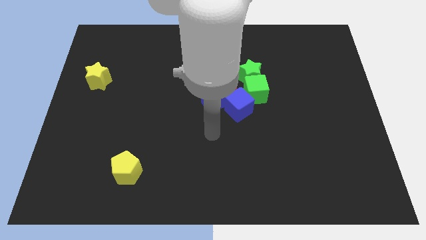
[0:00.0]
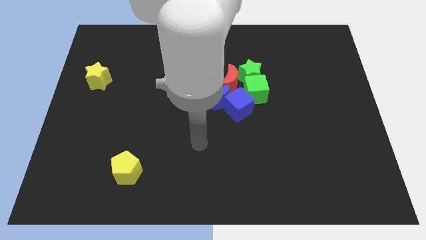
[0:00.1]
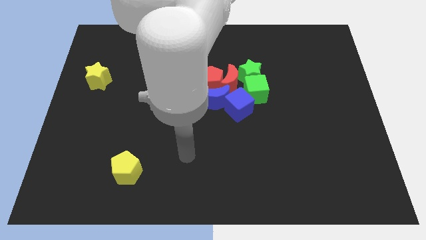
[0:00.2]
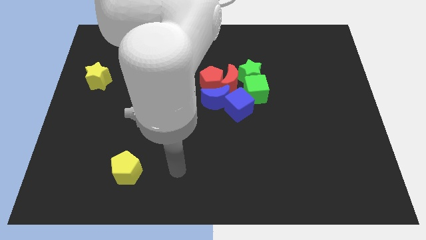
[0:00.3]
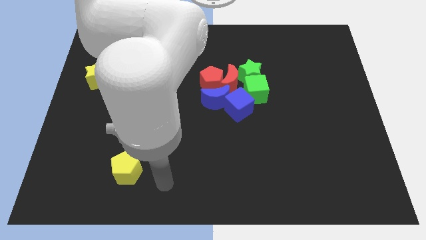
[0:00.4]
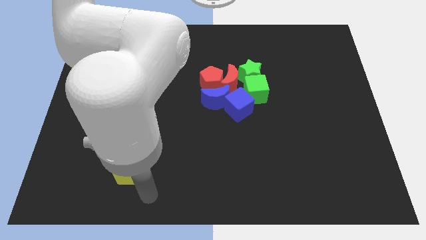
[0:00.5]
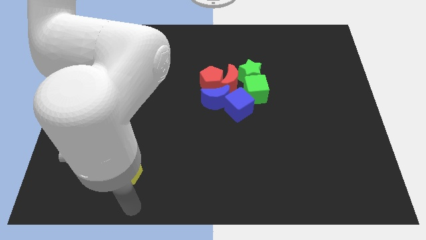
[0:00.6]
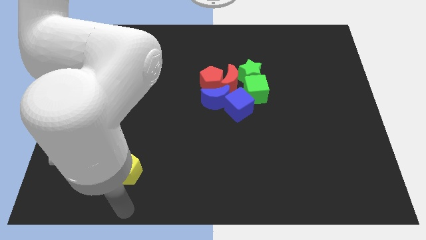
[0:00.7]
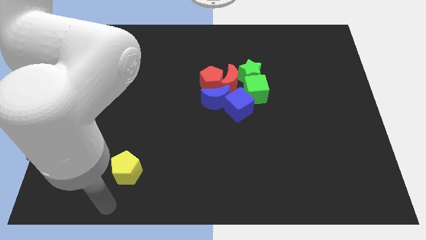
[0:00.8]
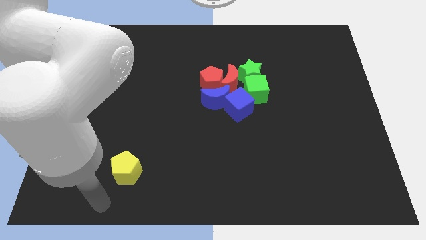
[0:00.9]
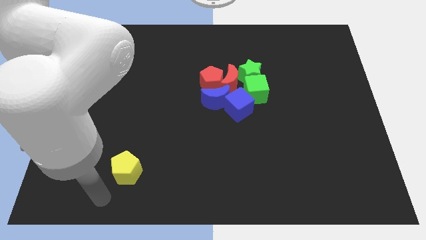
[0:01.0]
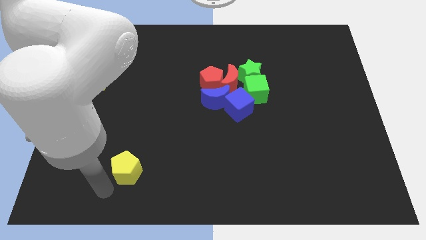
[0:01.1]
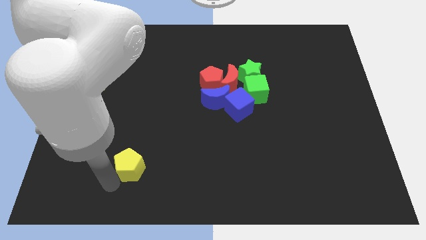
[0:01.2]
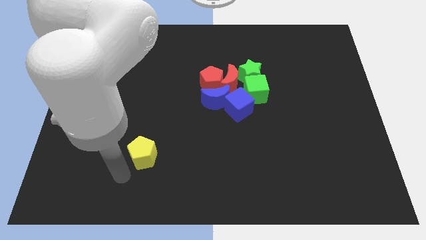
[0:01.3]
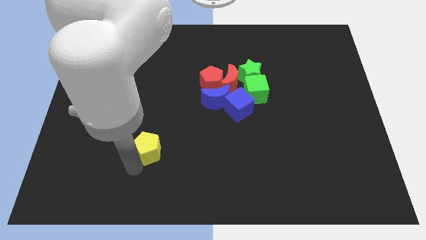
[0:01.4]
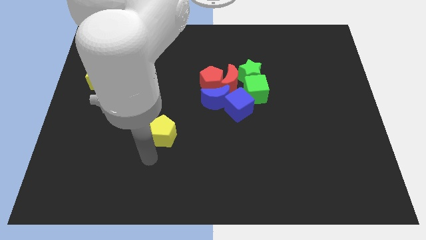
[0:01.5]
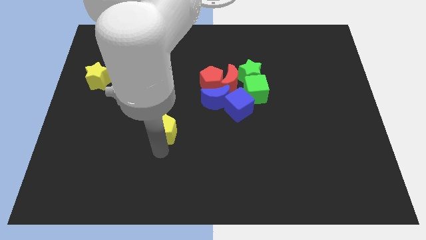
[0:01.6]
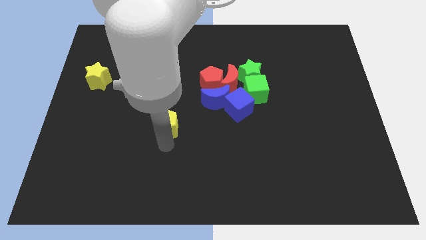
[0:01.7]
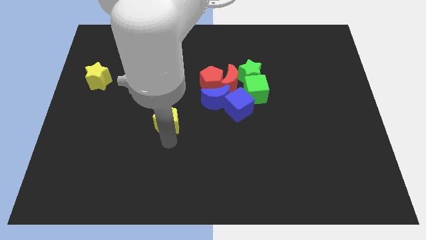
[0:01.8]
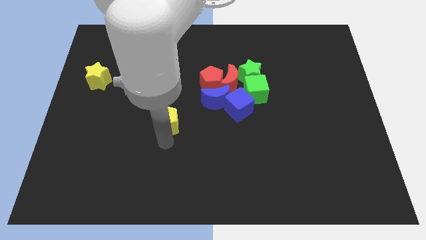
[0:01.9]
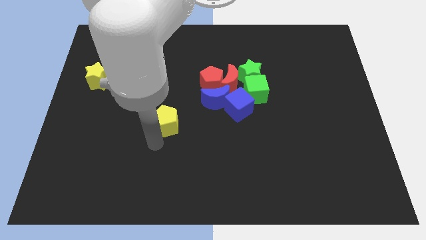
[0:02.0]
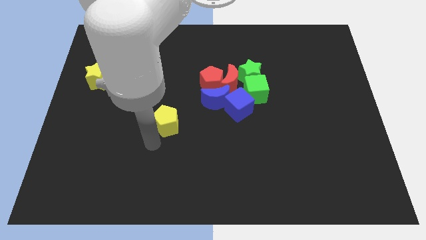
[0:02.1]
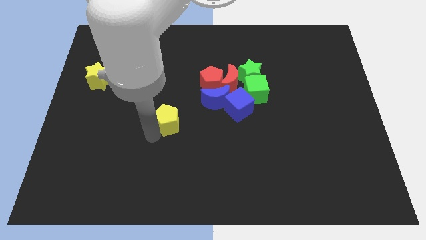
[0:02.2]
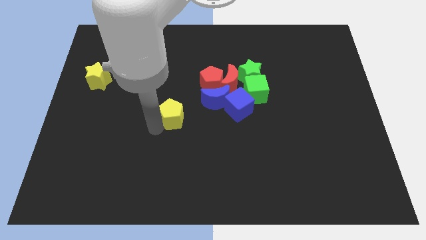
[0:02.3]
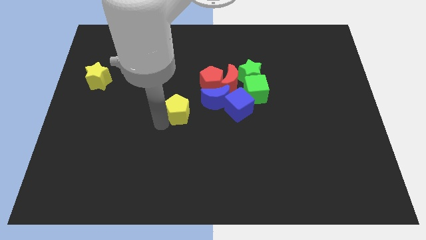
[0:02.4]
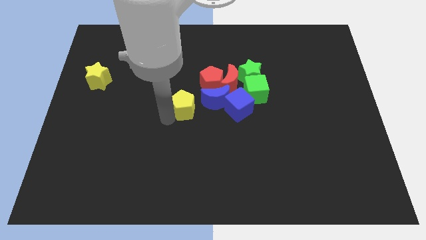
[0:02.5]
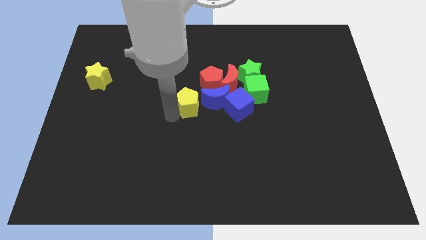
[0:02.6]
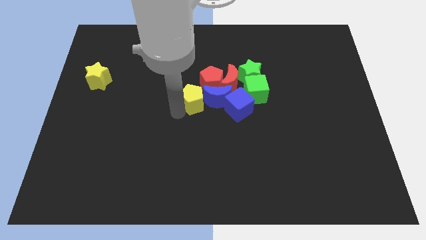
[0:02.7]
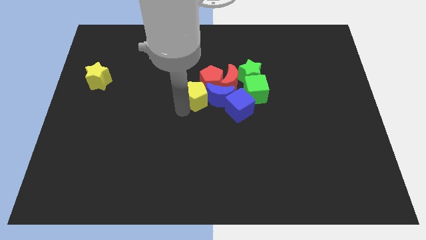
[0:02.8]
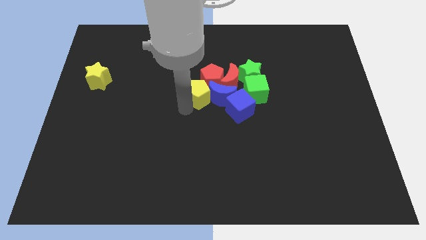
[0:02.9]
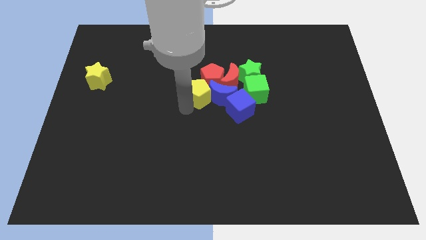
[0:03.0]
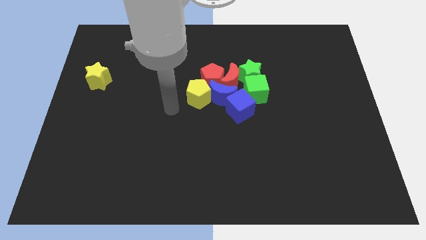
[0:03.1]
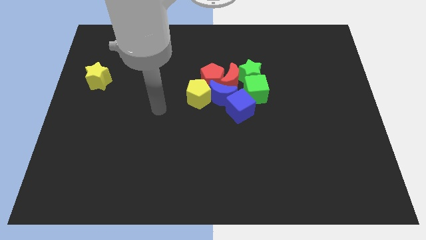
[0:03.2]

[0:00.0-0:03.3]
move yellow pentagon close to blue moon

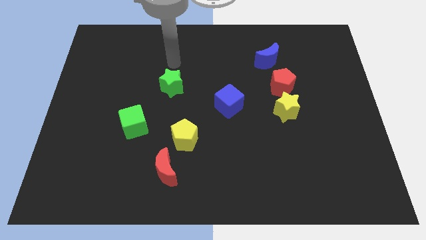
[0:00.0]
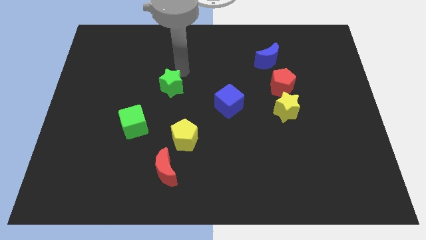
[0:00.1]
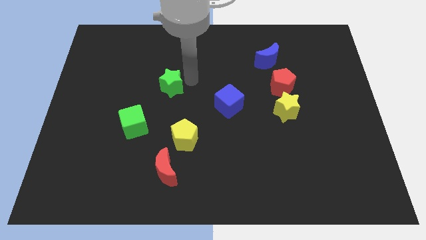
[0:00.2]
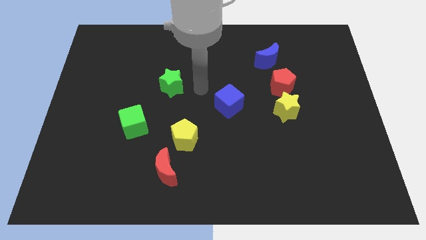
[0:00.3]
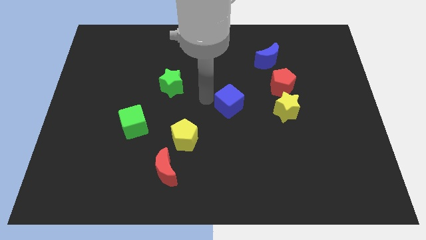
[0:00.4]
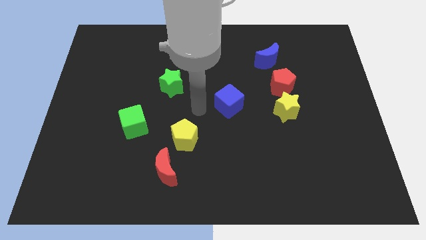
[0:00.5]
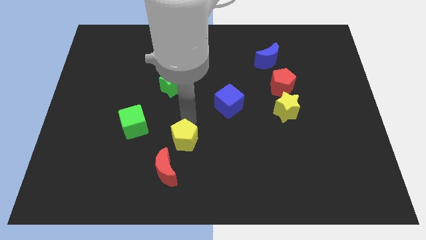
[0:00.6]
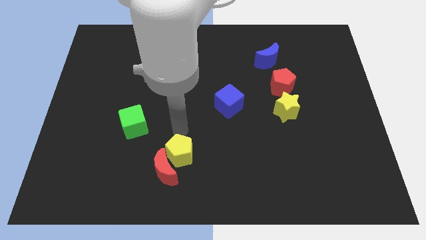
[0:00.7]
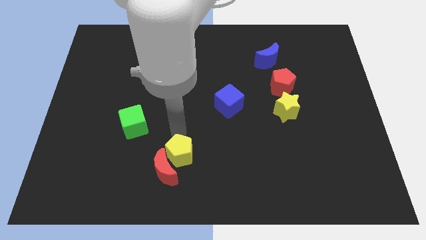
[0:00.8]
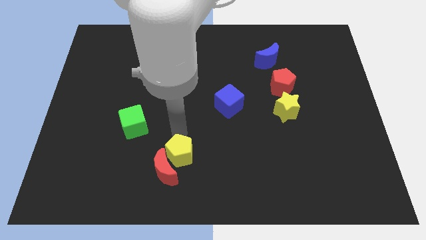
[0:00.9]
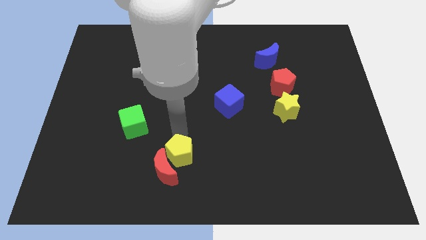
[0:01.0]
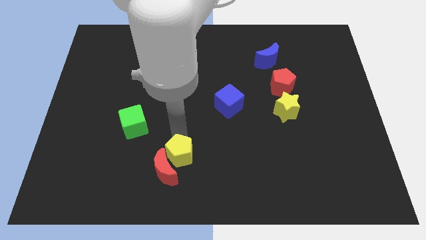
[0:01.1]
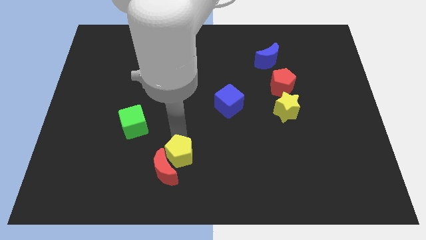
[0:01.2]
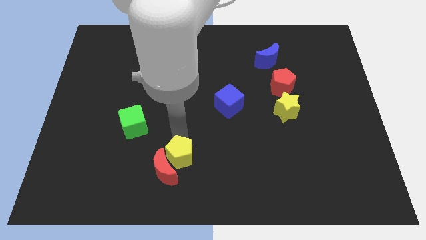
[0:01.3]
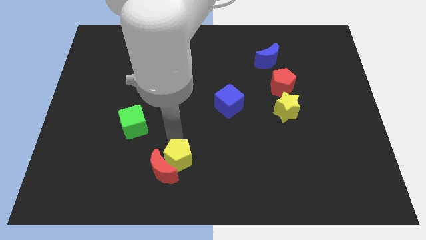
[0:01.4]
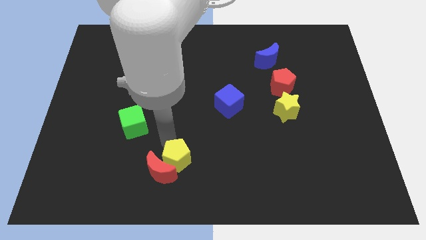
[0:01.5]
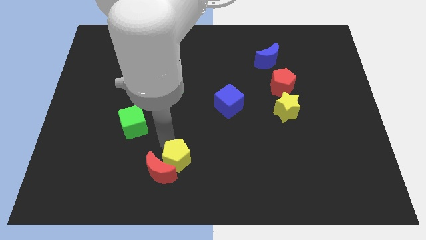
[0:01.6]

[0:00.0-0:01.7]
push the yellow pentagon into the red moon

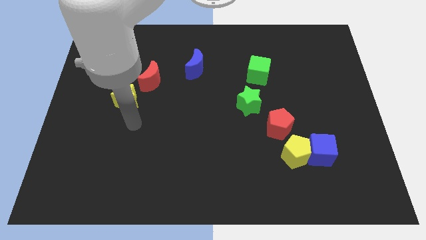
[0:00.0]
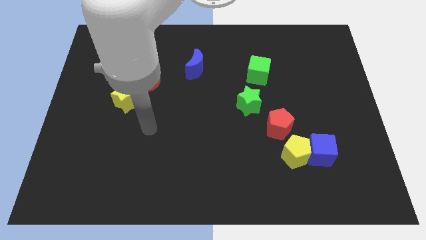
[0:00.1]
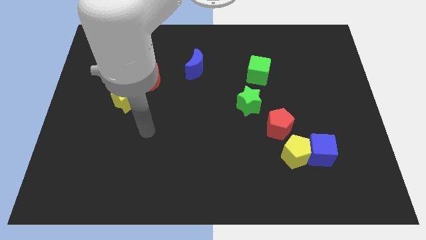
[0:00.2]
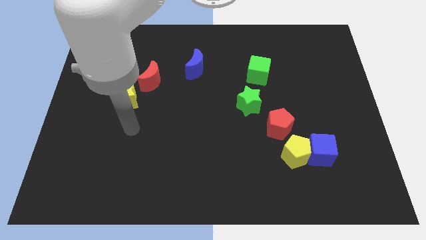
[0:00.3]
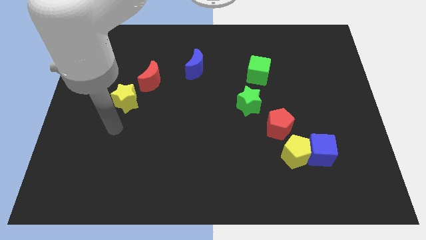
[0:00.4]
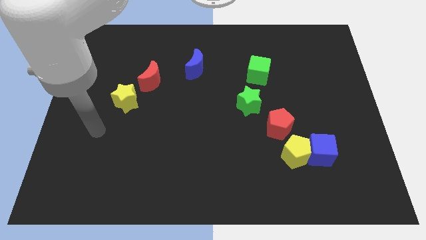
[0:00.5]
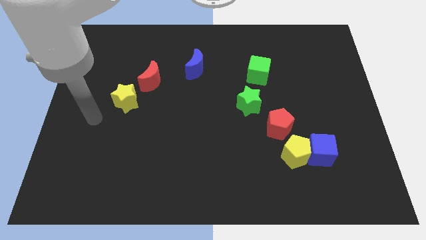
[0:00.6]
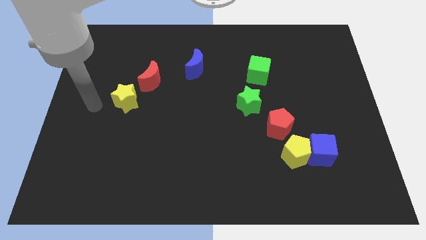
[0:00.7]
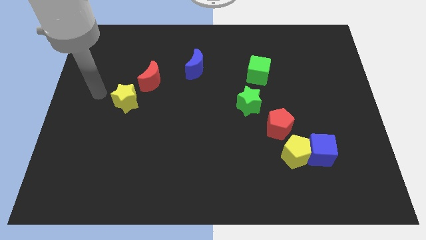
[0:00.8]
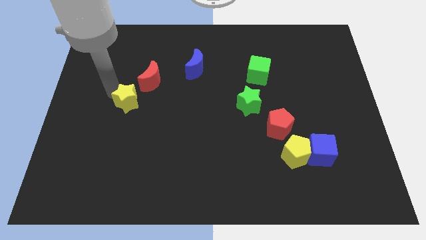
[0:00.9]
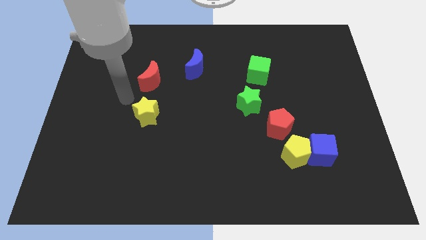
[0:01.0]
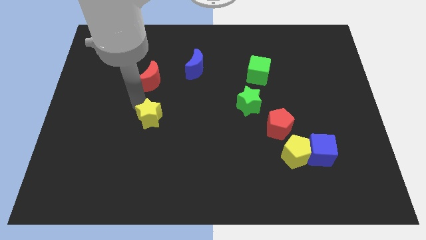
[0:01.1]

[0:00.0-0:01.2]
place the yellow star to the left of the red pentagon

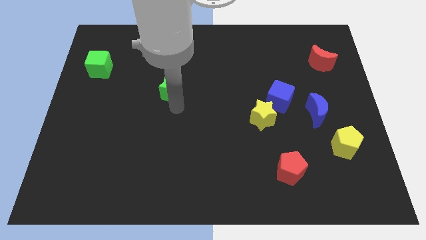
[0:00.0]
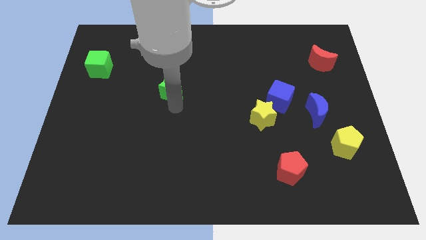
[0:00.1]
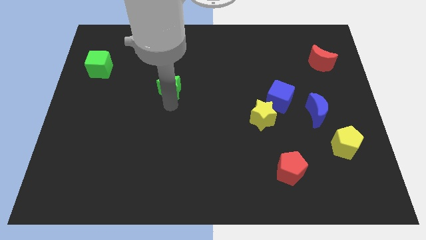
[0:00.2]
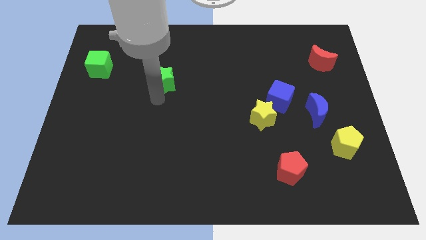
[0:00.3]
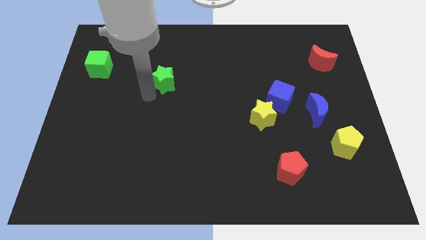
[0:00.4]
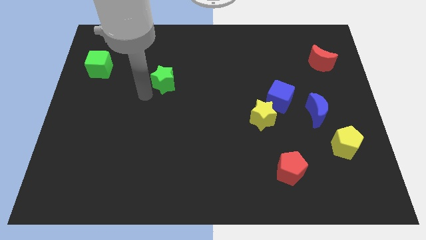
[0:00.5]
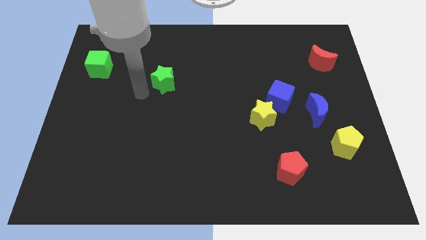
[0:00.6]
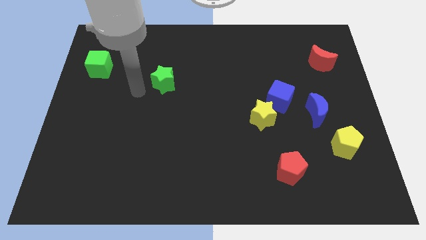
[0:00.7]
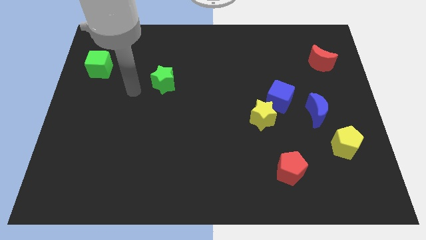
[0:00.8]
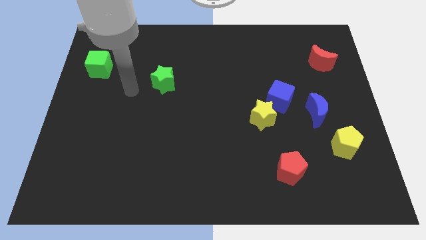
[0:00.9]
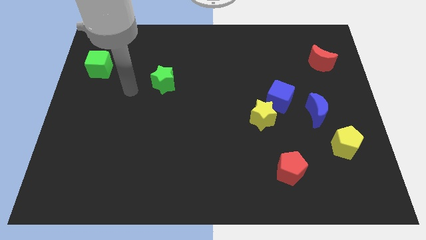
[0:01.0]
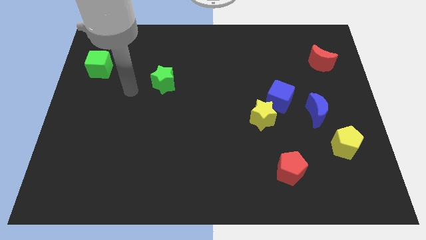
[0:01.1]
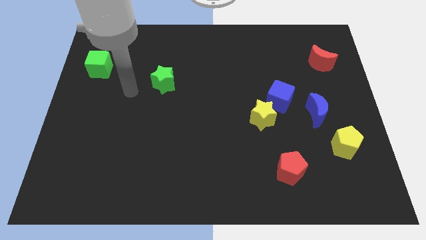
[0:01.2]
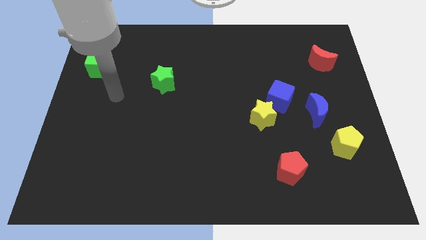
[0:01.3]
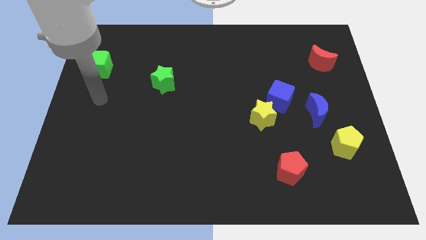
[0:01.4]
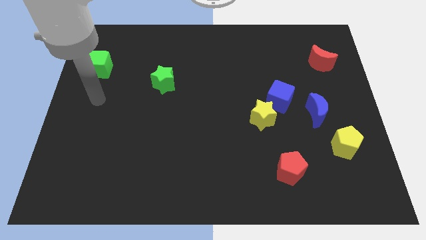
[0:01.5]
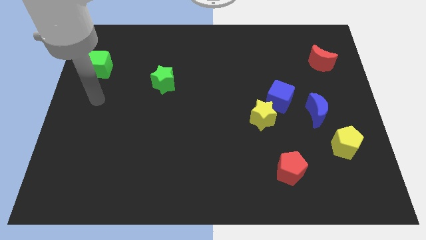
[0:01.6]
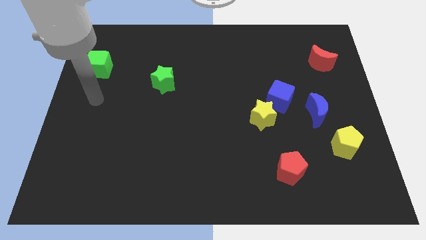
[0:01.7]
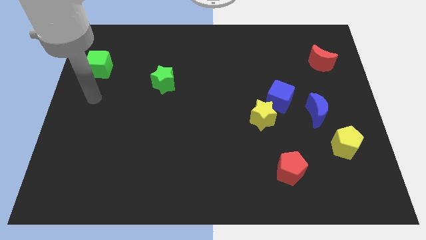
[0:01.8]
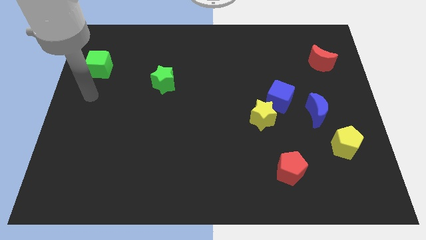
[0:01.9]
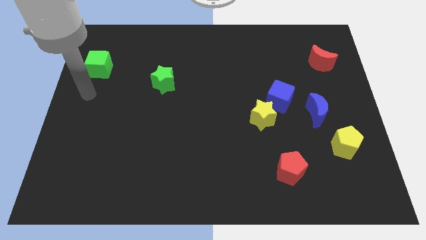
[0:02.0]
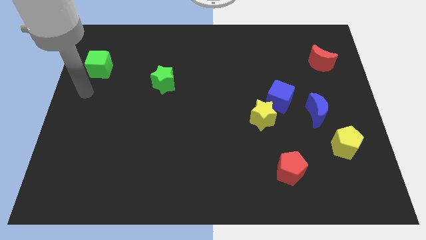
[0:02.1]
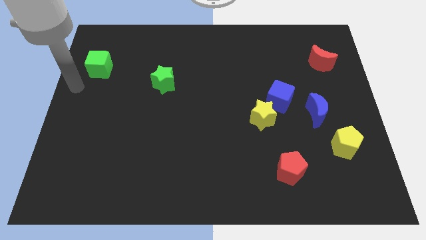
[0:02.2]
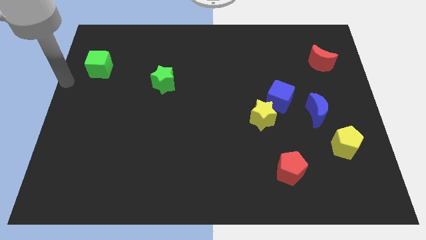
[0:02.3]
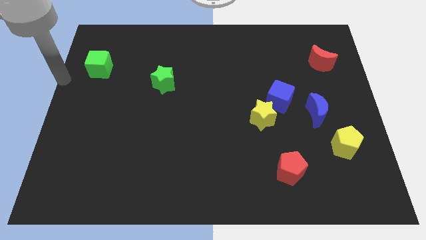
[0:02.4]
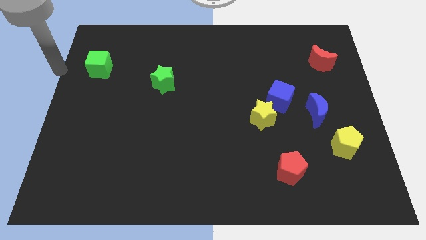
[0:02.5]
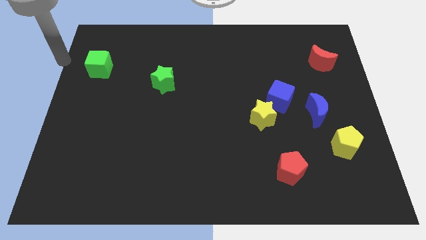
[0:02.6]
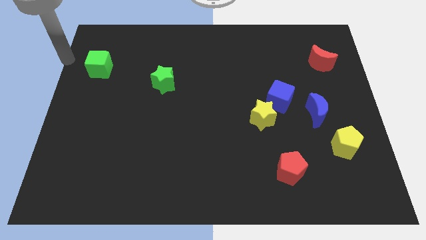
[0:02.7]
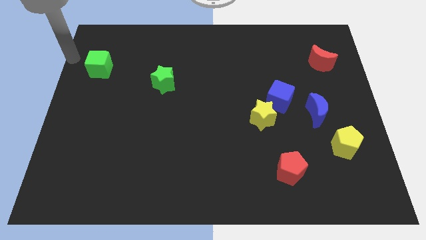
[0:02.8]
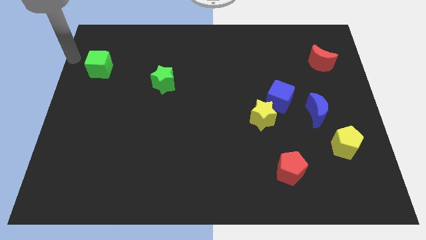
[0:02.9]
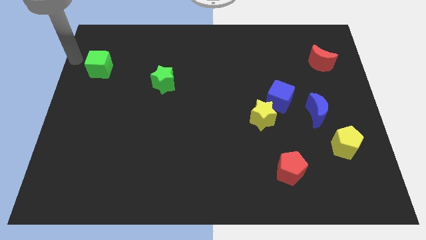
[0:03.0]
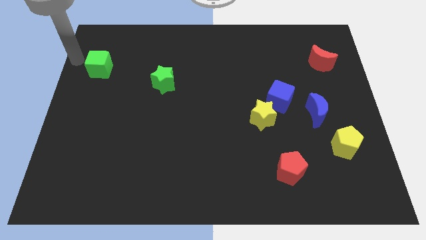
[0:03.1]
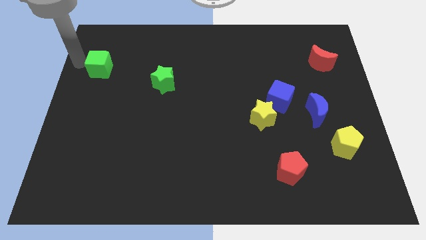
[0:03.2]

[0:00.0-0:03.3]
touch the bottom of green star
